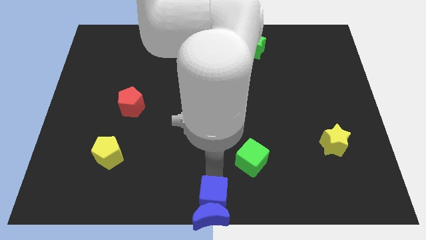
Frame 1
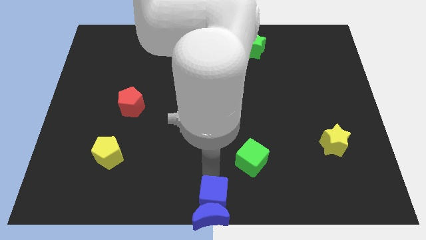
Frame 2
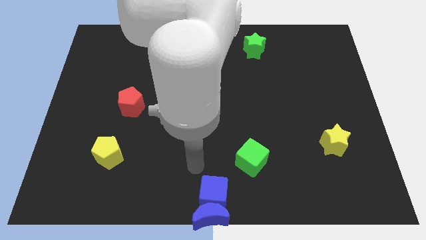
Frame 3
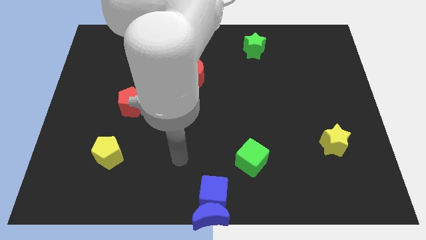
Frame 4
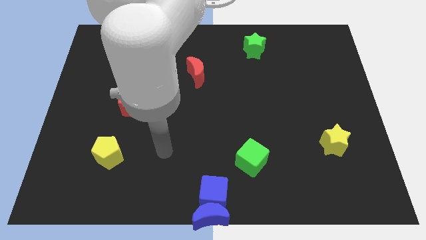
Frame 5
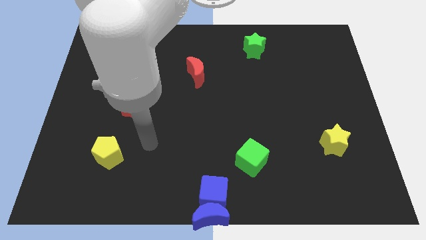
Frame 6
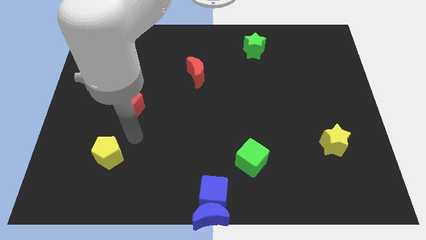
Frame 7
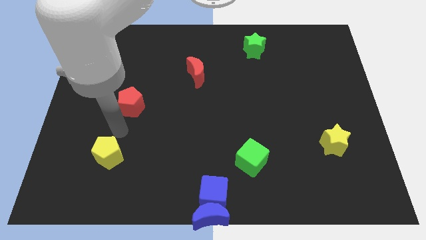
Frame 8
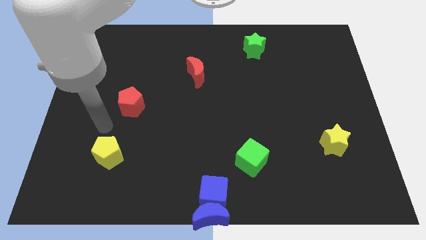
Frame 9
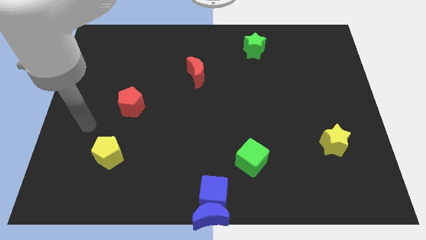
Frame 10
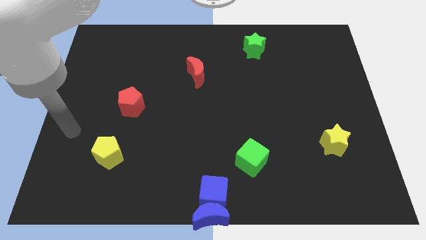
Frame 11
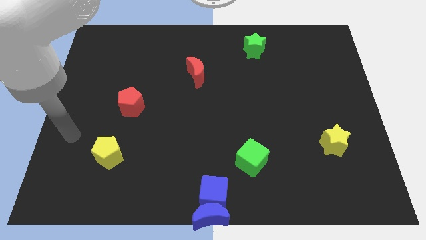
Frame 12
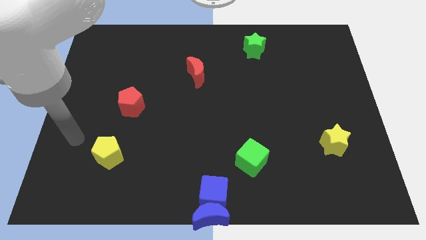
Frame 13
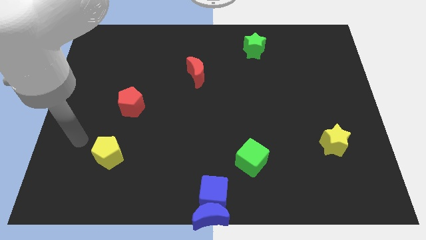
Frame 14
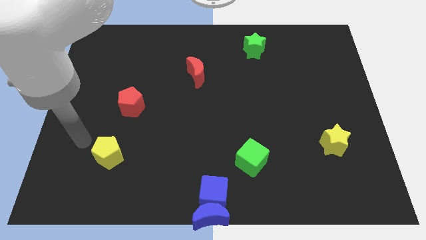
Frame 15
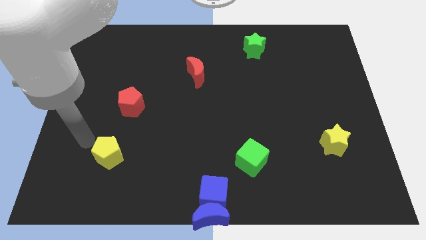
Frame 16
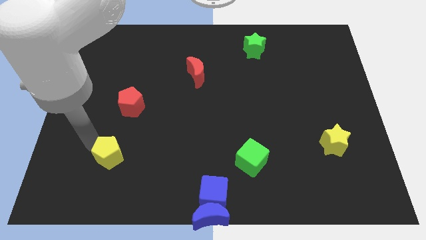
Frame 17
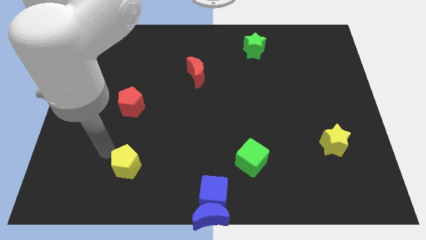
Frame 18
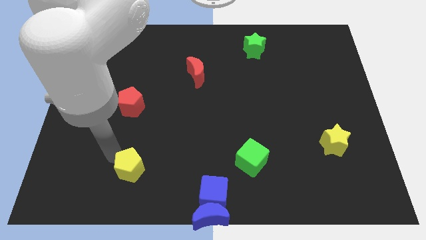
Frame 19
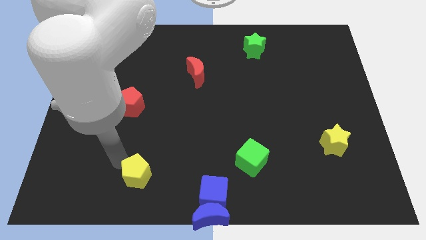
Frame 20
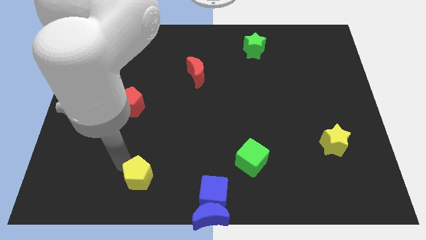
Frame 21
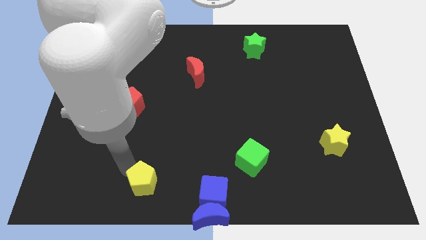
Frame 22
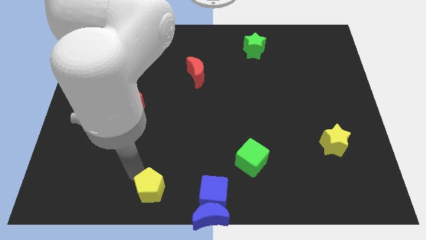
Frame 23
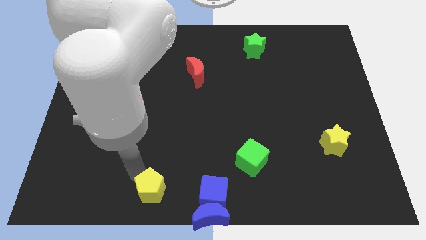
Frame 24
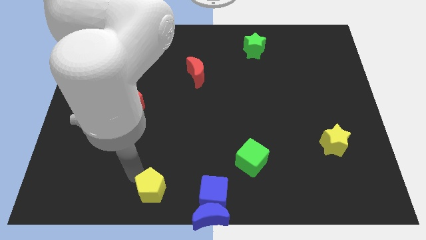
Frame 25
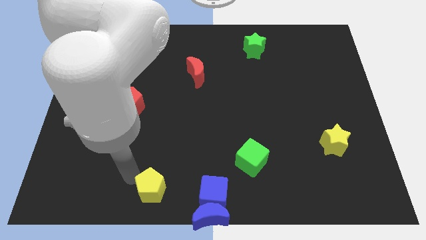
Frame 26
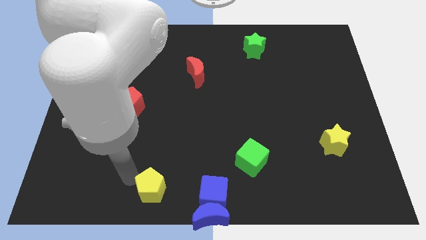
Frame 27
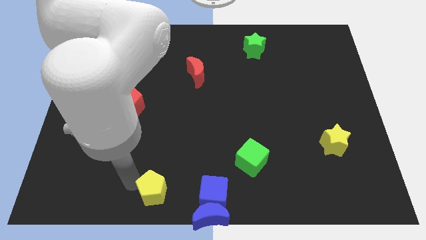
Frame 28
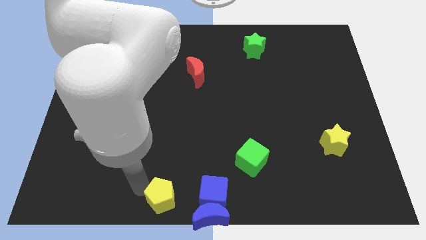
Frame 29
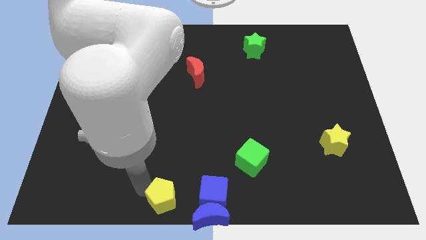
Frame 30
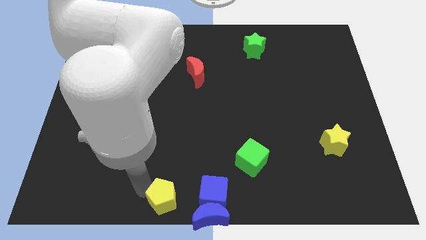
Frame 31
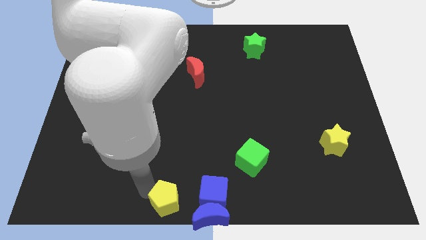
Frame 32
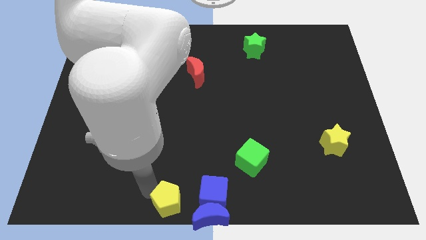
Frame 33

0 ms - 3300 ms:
place the yellow pentagon left to the blue blocks

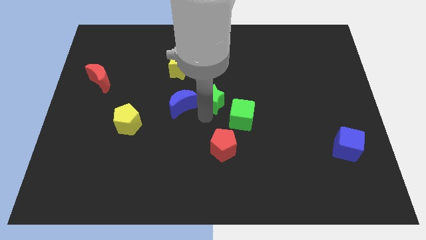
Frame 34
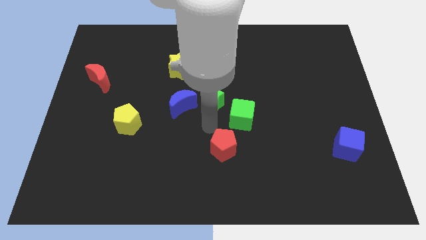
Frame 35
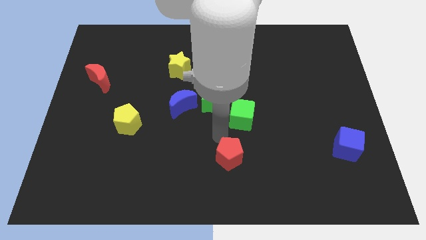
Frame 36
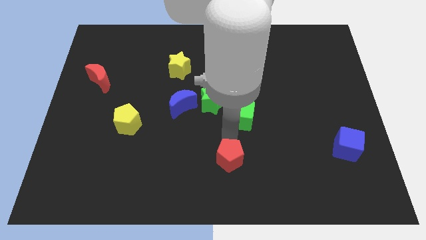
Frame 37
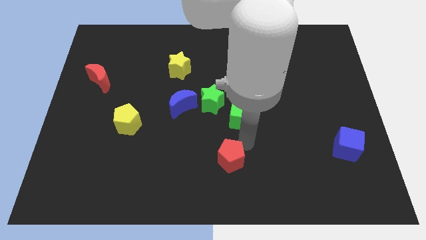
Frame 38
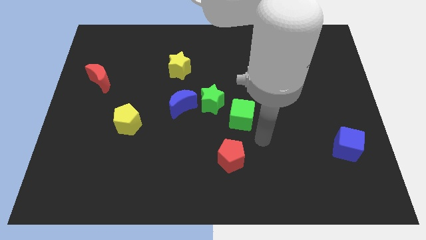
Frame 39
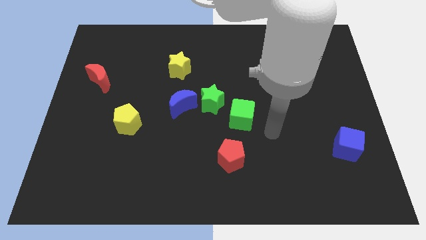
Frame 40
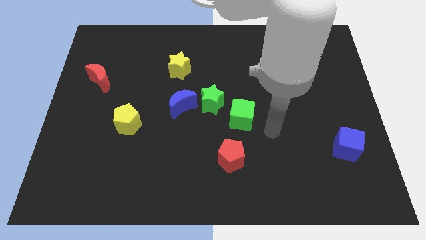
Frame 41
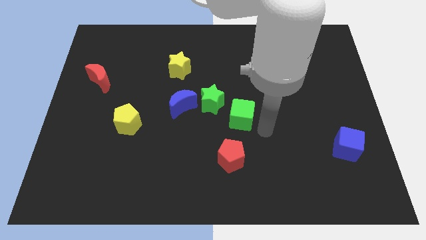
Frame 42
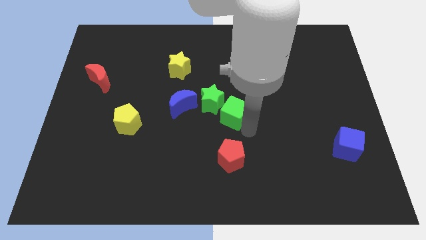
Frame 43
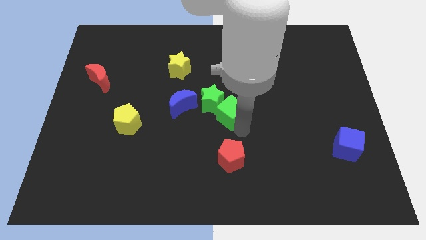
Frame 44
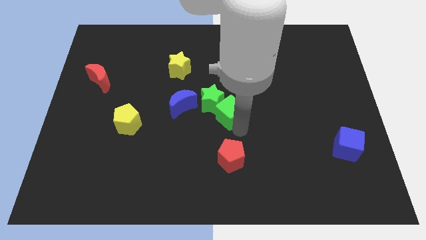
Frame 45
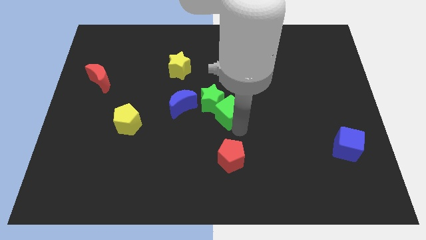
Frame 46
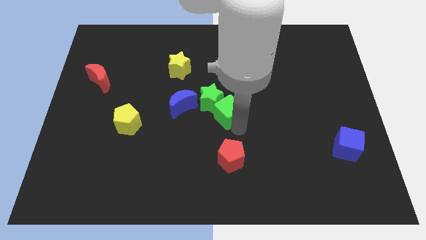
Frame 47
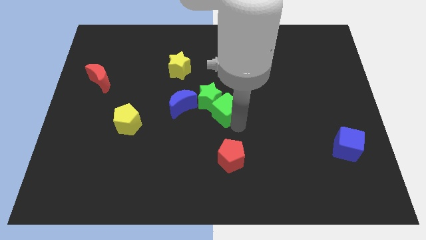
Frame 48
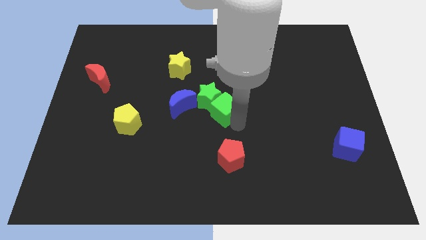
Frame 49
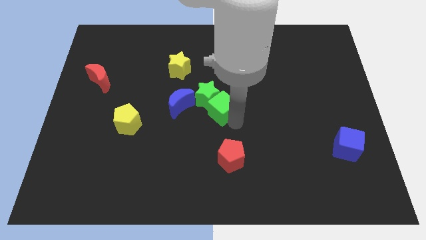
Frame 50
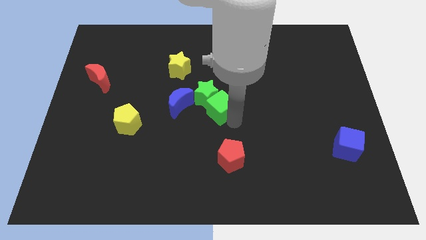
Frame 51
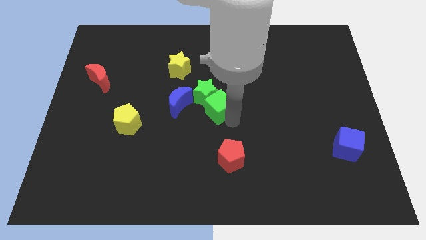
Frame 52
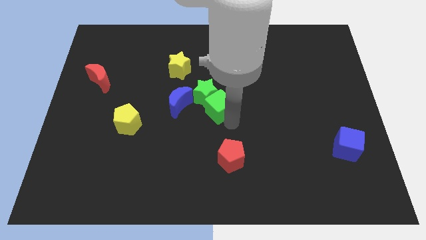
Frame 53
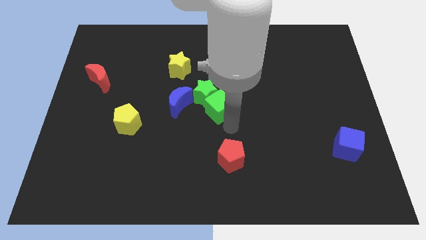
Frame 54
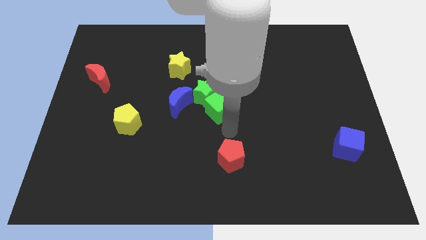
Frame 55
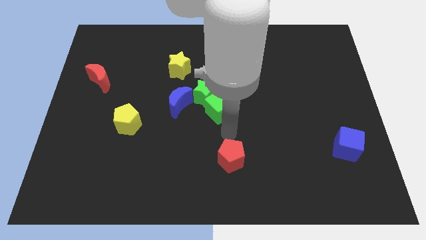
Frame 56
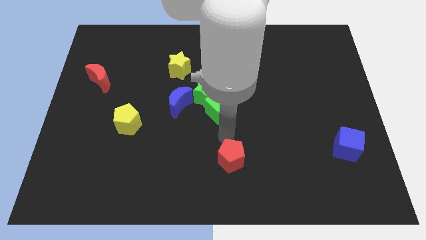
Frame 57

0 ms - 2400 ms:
move the green cube into the green star

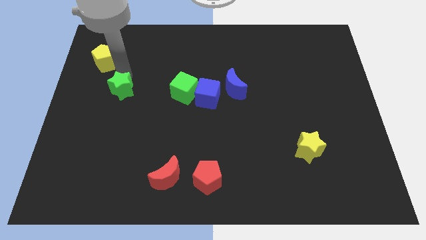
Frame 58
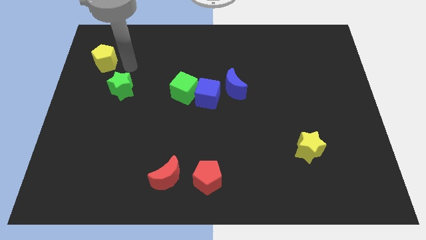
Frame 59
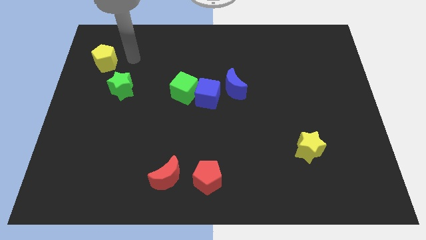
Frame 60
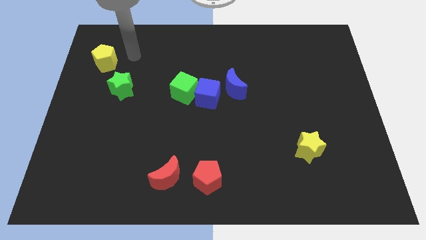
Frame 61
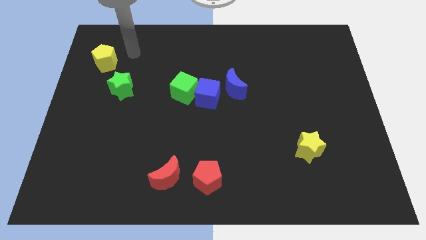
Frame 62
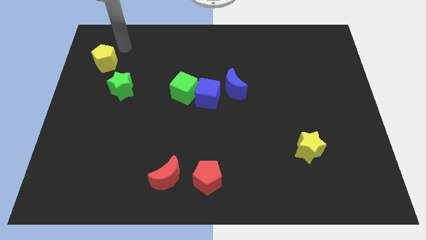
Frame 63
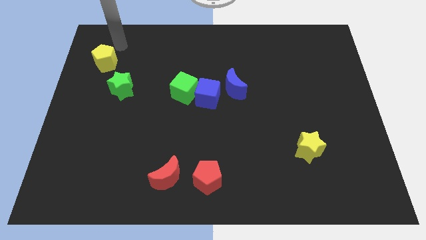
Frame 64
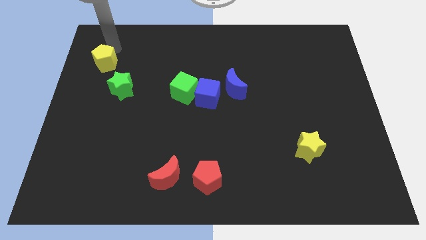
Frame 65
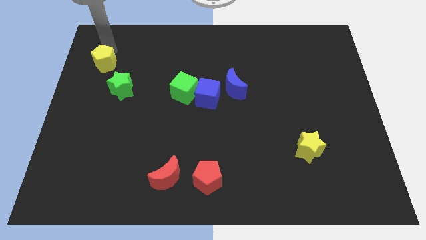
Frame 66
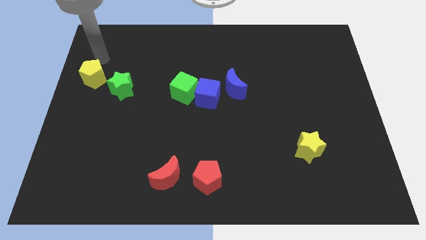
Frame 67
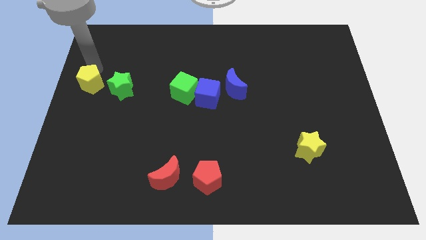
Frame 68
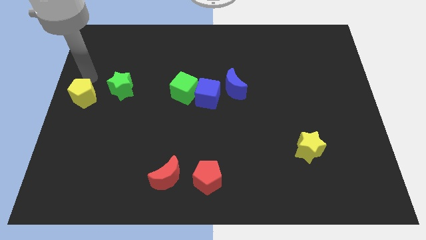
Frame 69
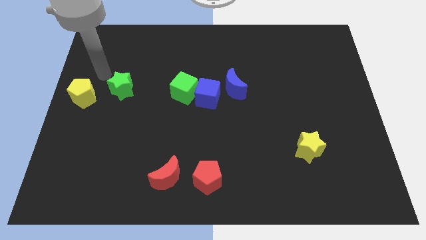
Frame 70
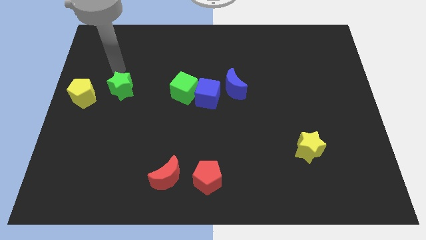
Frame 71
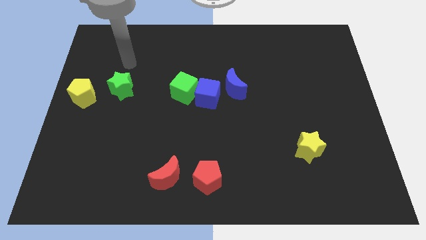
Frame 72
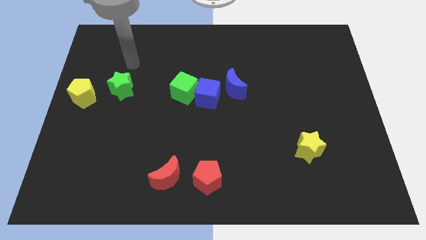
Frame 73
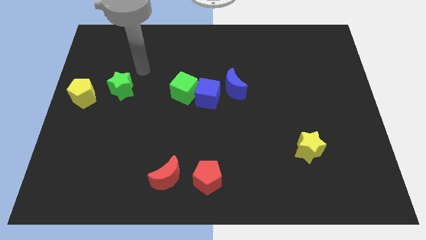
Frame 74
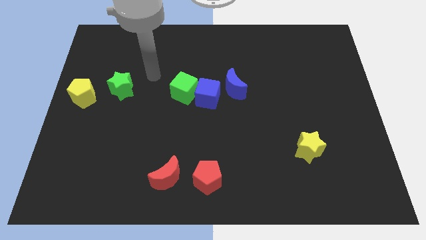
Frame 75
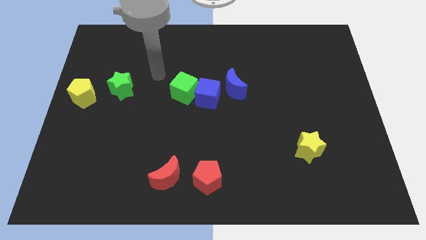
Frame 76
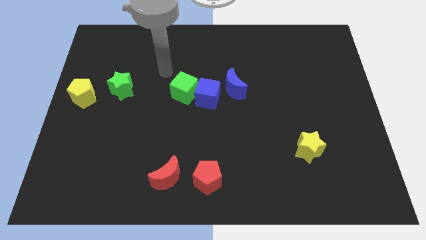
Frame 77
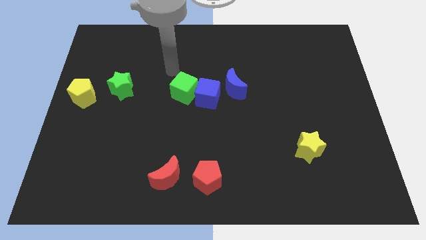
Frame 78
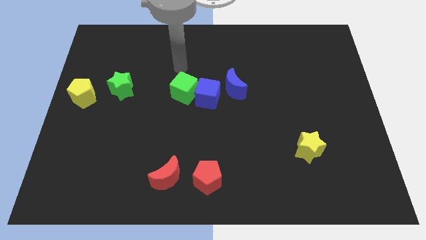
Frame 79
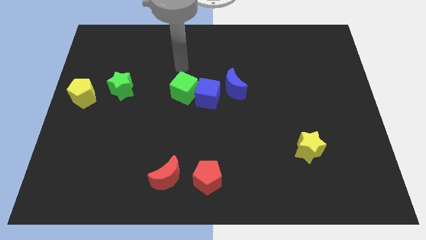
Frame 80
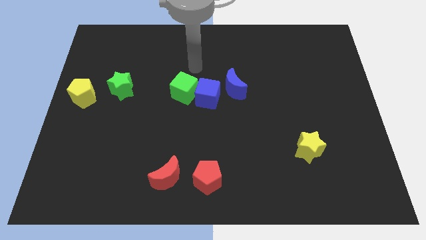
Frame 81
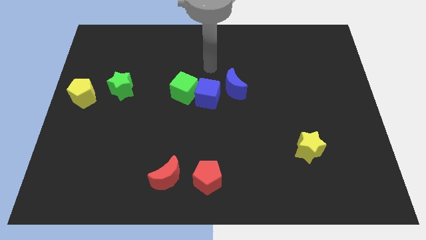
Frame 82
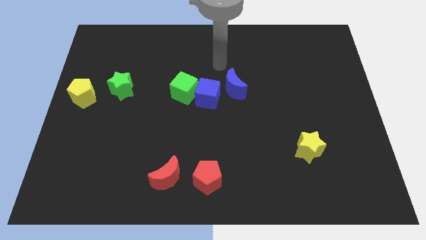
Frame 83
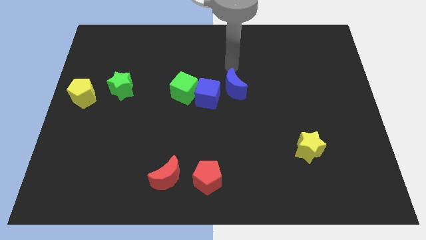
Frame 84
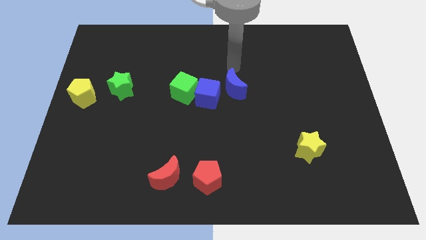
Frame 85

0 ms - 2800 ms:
move the yellow pentagon to the center left

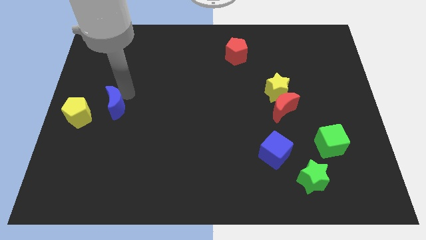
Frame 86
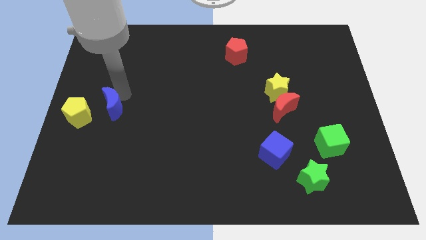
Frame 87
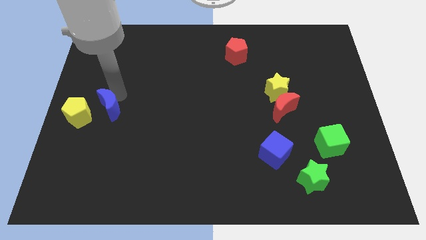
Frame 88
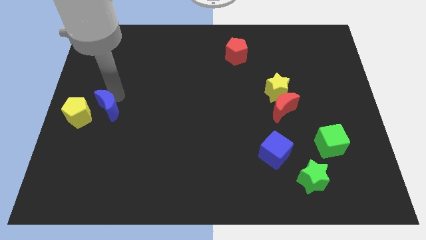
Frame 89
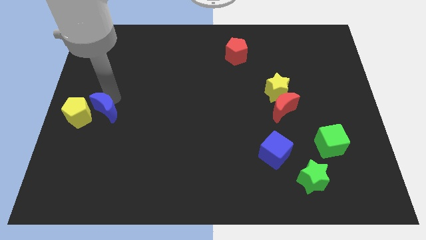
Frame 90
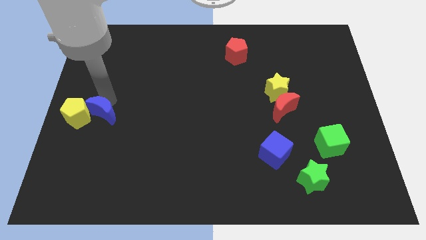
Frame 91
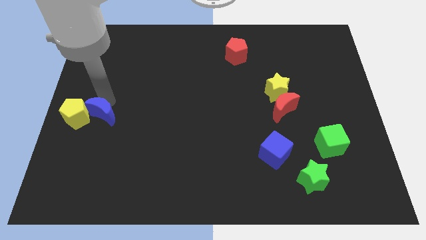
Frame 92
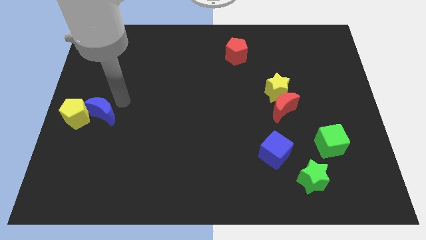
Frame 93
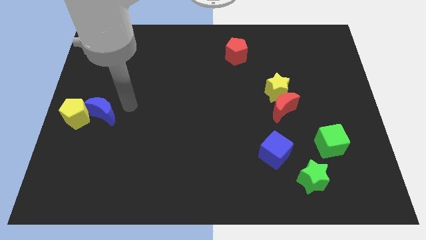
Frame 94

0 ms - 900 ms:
move the blue crescent towards the center left side of the board
